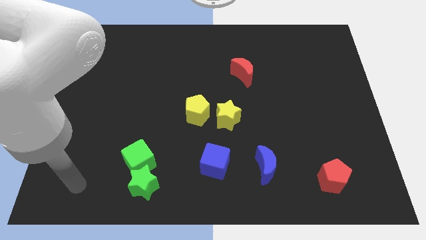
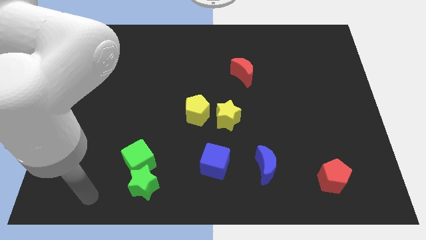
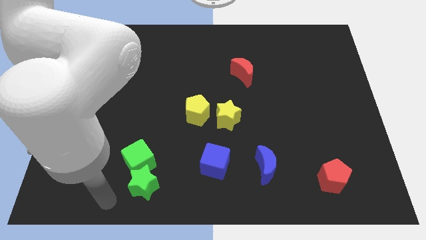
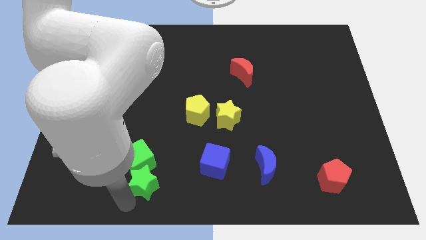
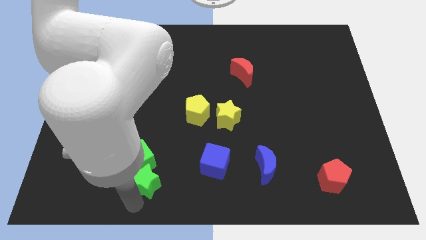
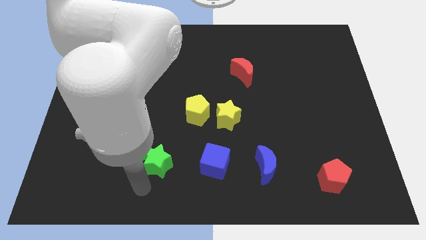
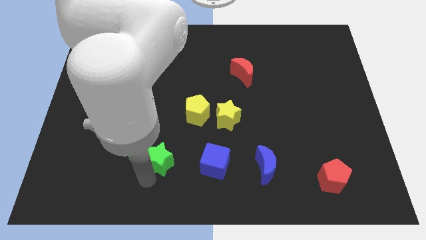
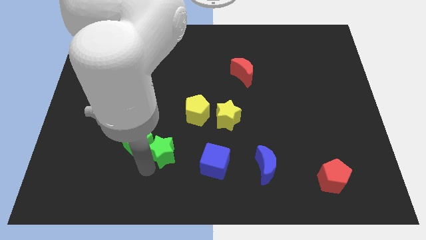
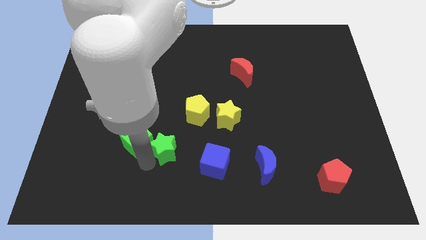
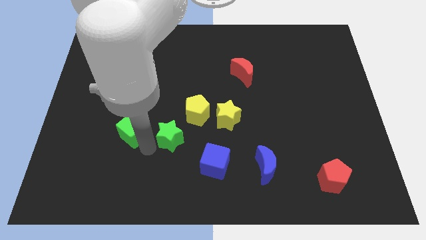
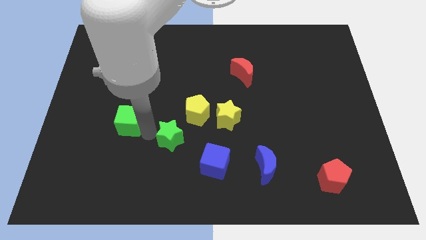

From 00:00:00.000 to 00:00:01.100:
place your arm in between the green blocks

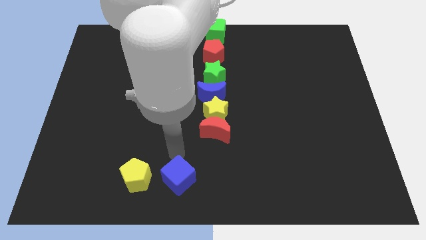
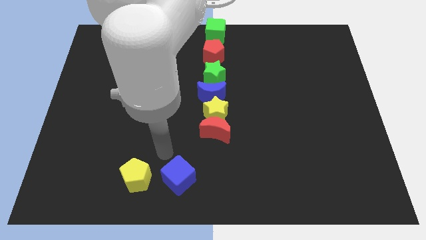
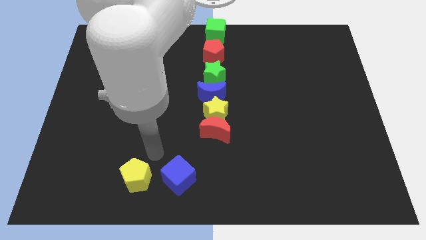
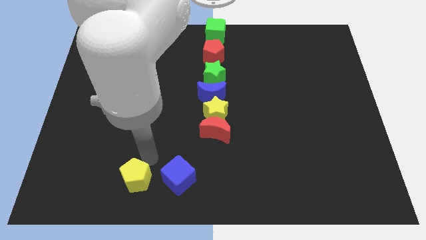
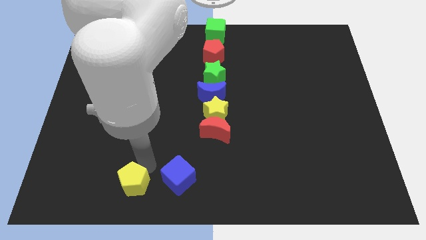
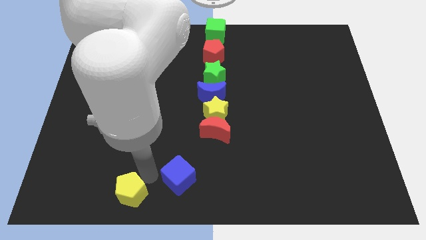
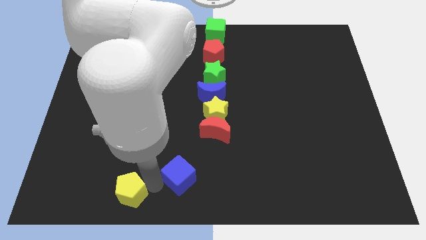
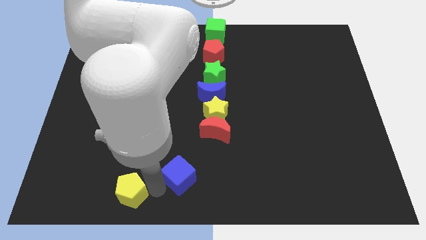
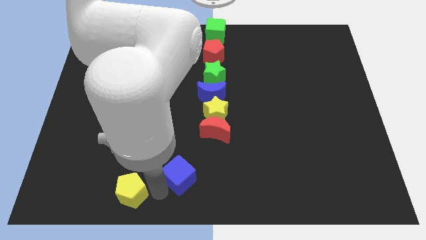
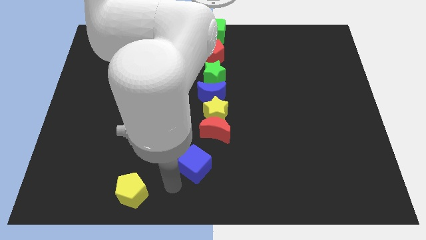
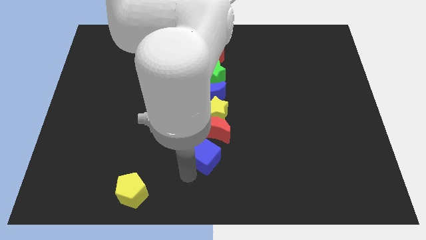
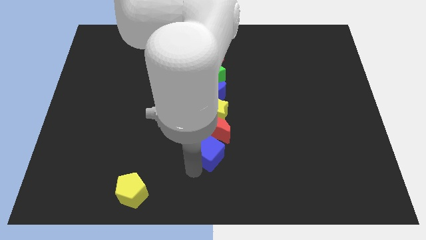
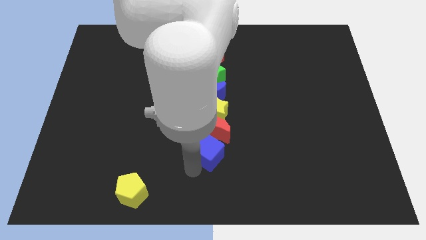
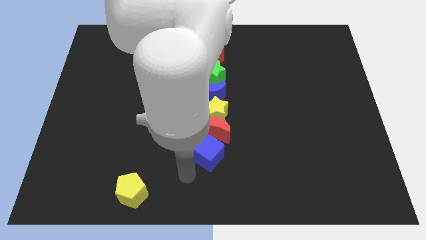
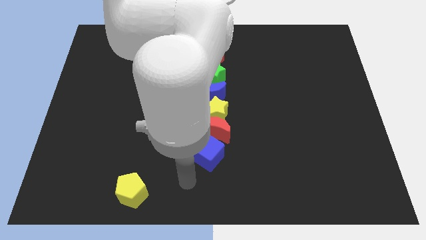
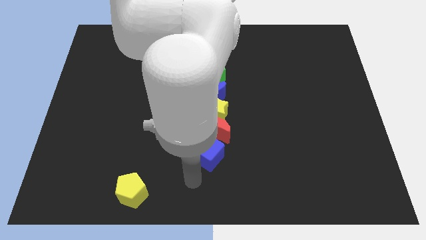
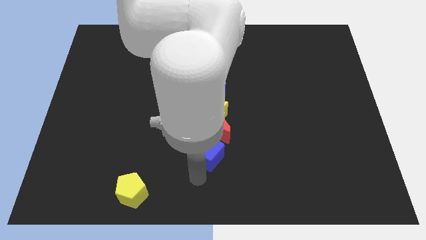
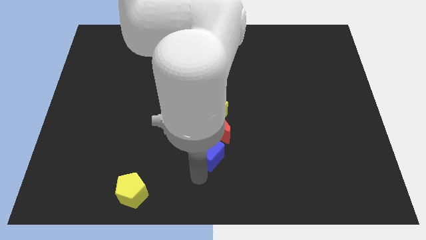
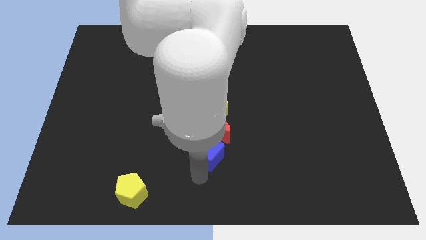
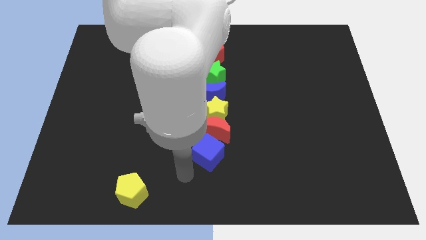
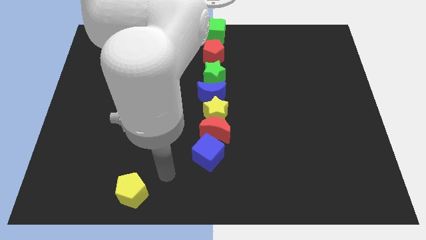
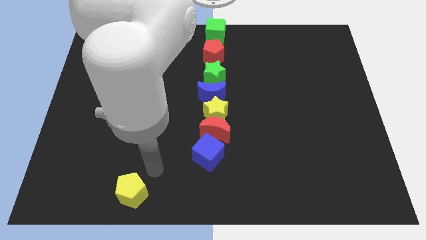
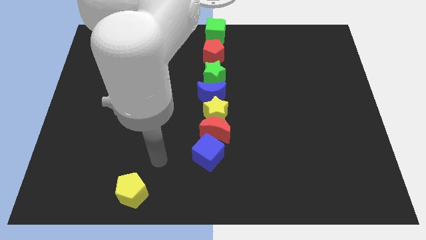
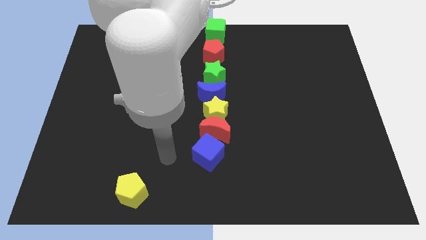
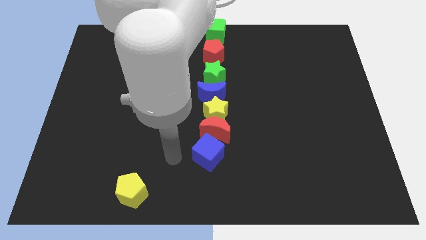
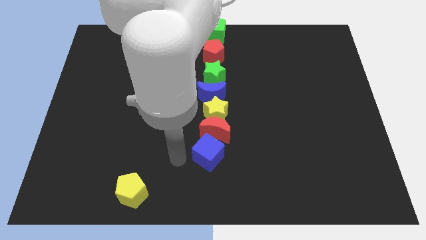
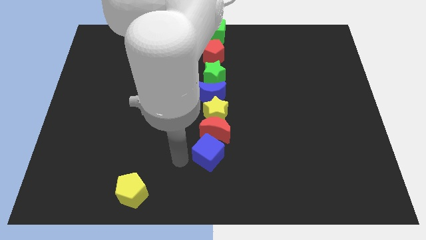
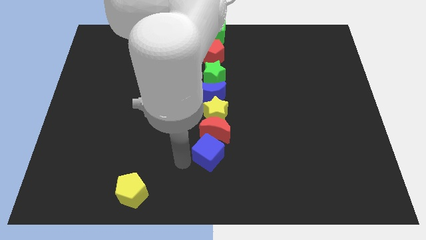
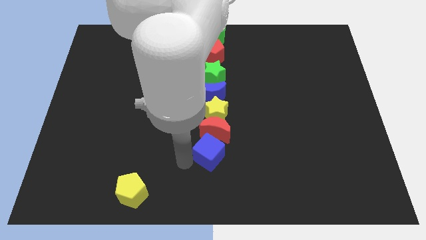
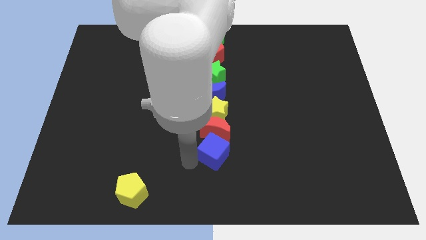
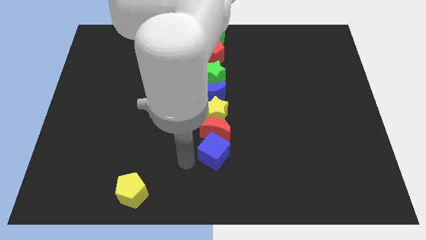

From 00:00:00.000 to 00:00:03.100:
separate the blue cube towards the bottom of red moon in a line

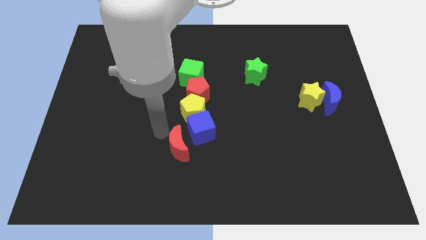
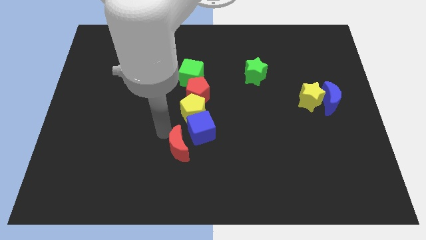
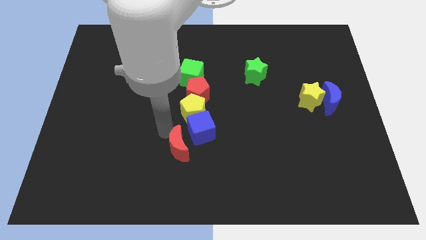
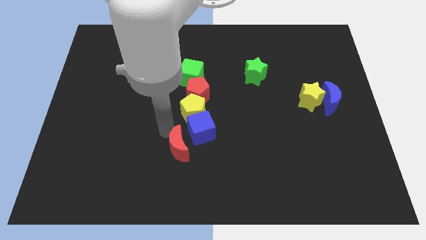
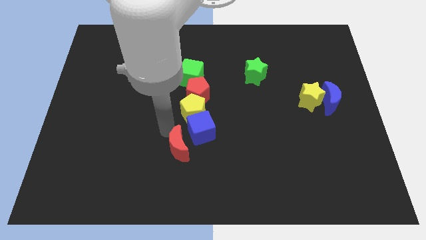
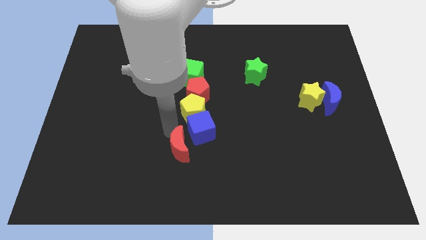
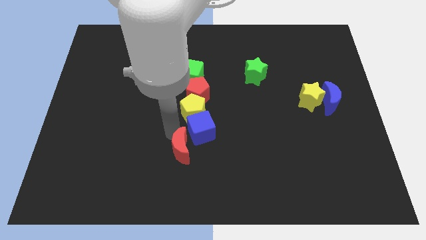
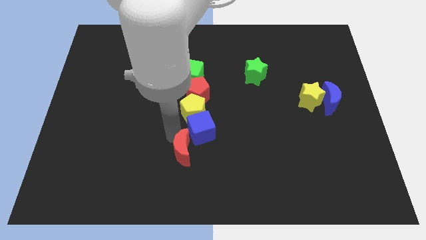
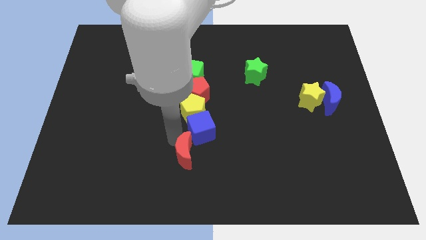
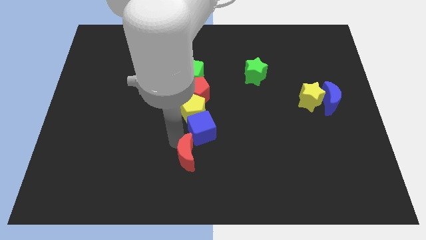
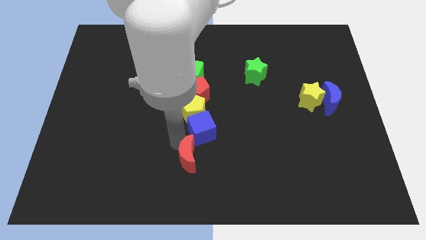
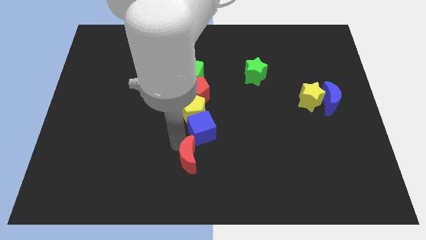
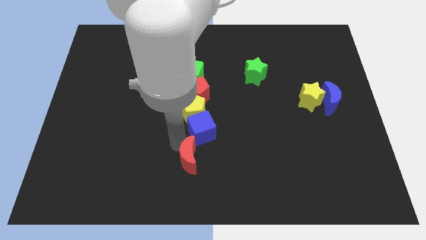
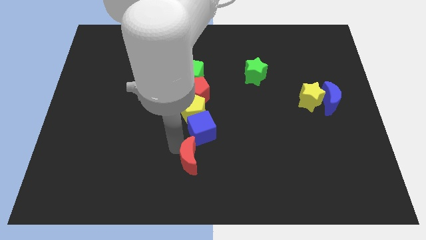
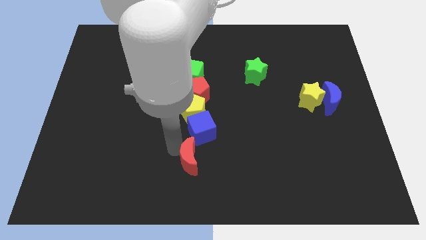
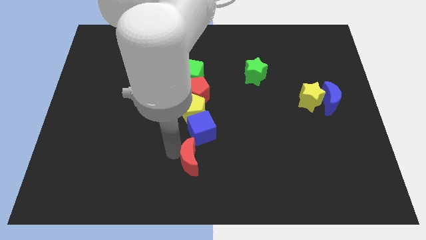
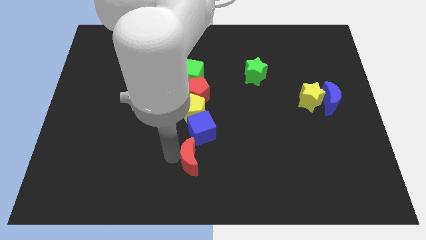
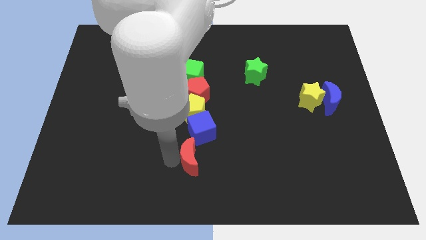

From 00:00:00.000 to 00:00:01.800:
place the red crescent to the bottom left of the blue cube

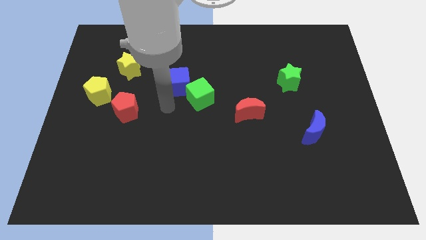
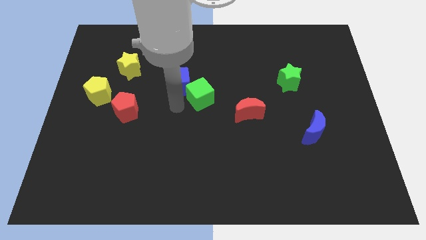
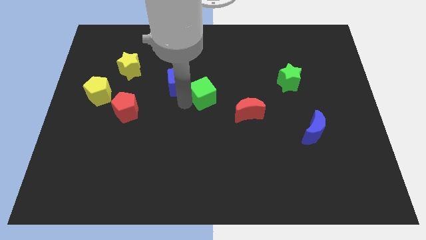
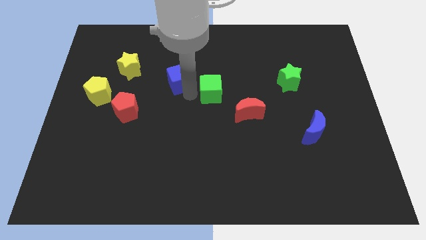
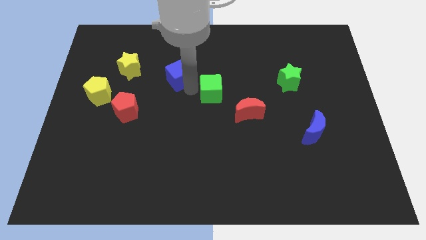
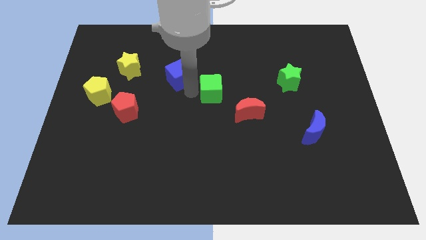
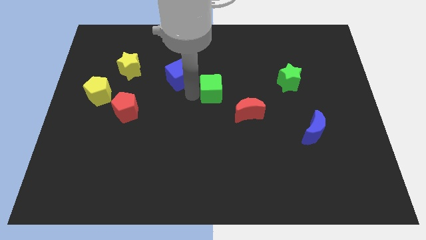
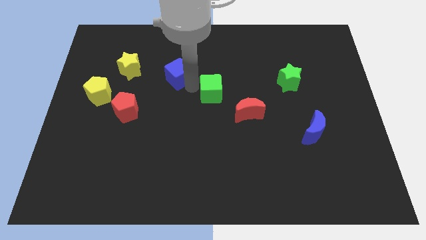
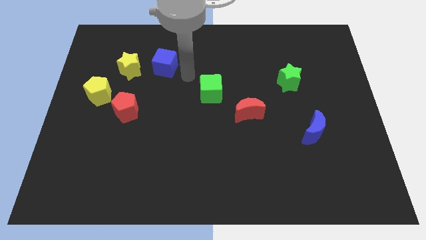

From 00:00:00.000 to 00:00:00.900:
place the blue cube to the right side of yellow star

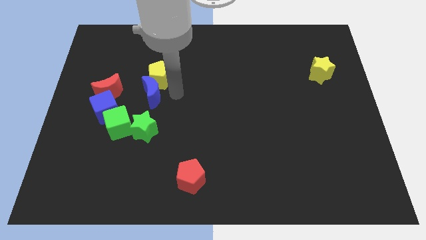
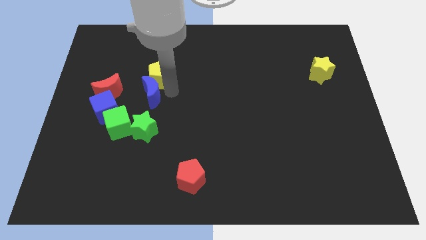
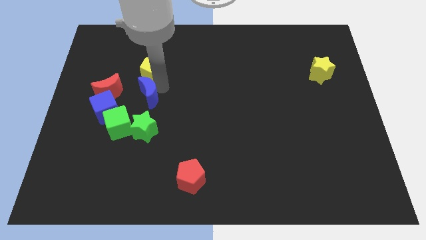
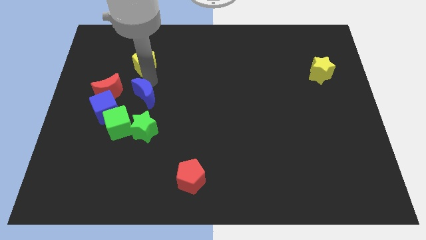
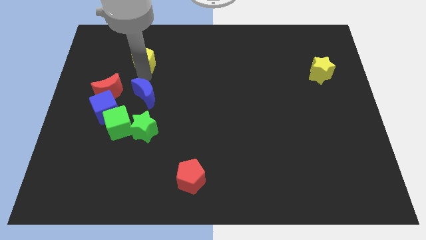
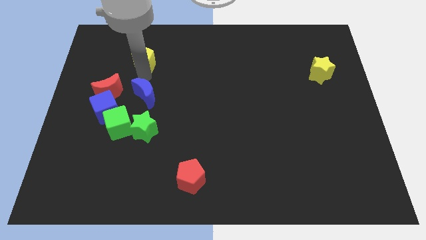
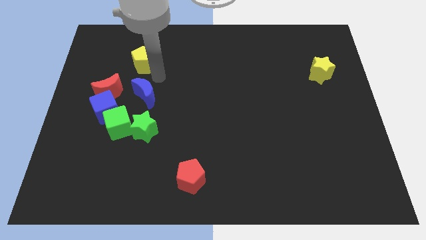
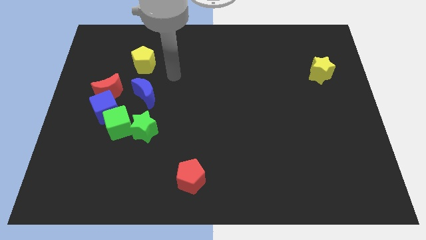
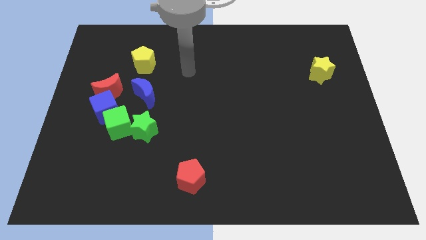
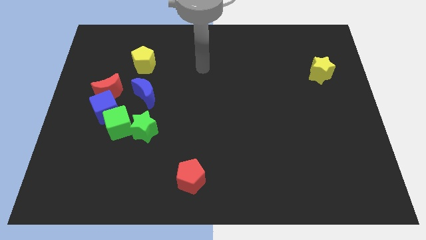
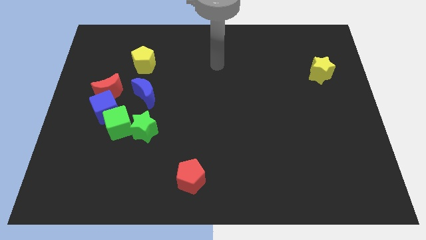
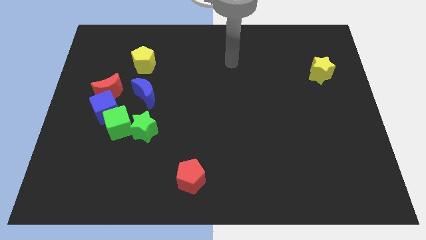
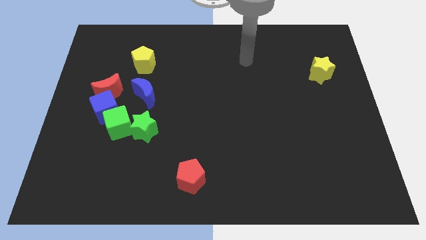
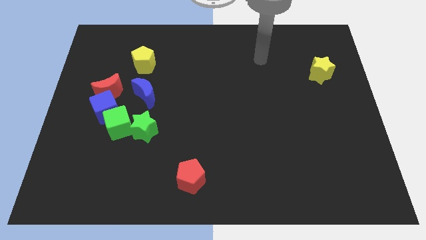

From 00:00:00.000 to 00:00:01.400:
separate the yellow pentagon and the blue crescent

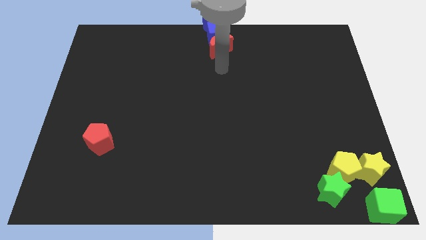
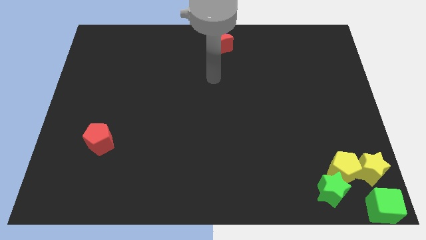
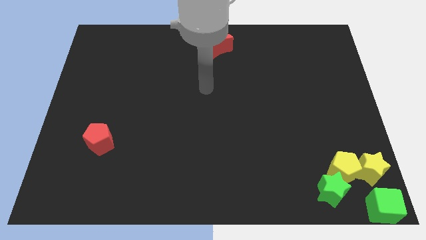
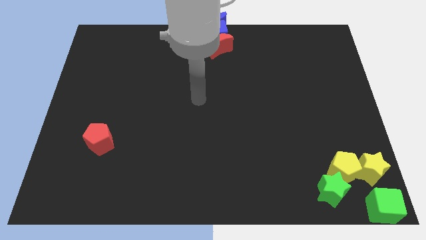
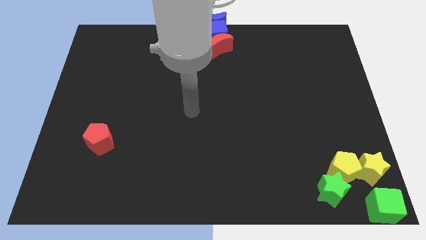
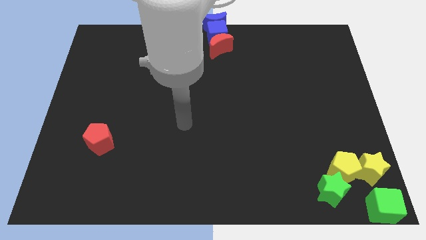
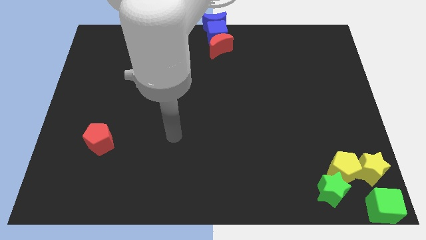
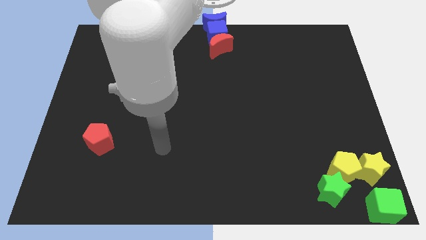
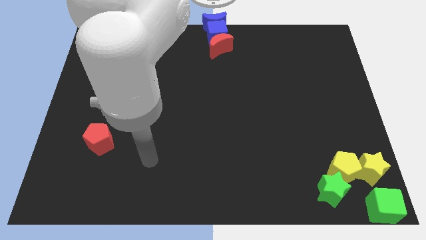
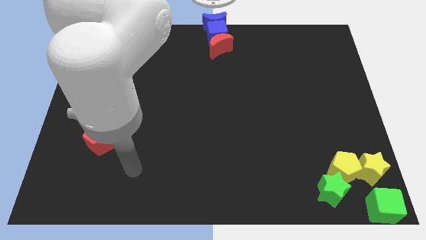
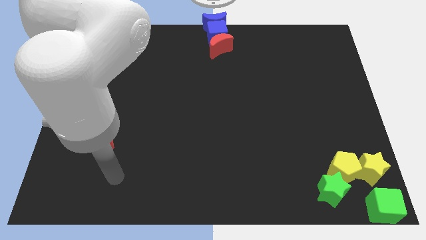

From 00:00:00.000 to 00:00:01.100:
move your arm towards the bottom side of the board
